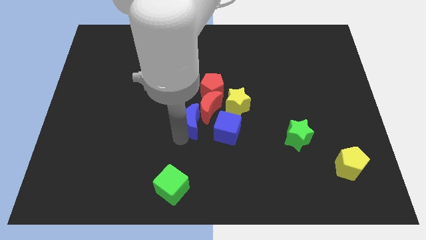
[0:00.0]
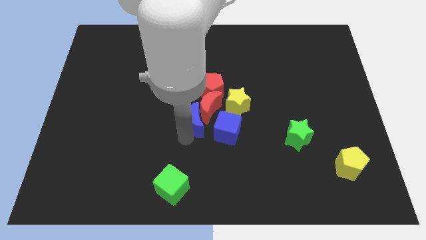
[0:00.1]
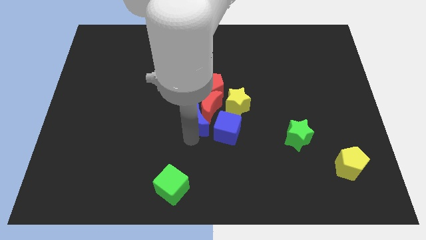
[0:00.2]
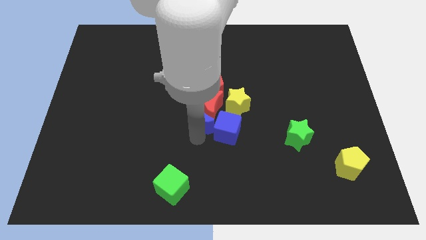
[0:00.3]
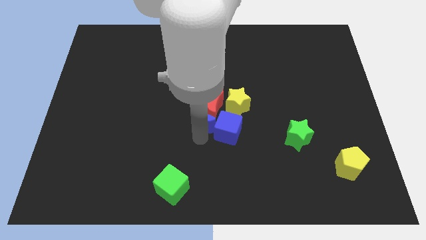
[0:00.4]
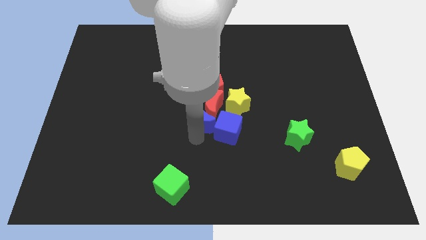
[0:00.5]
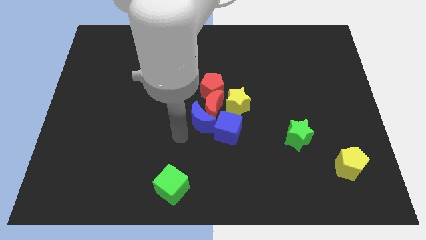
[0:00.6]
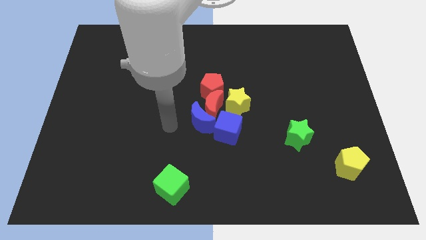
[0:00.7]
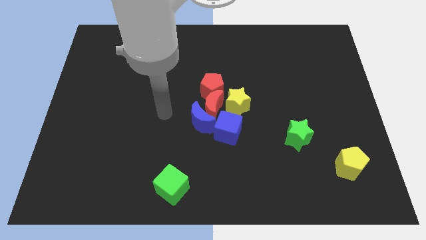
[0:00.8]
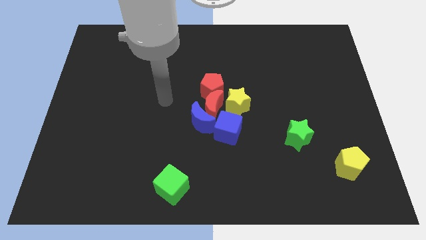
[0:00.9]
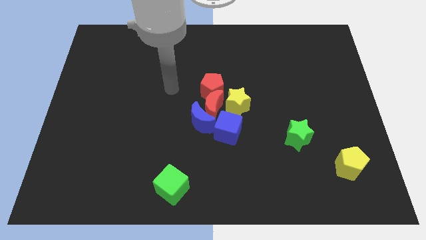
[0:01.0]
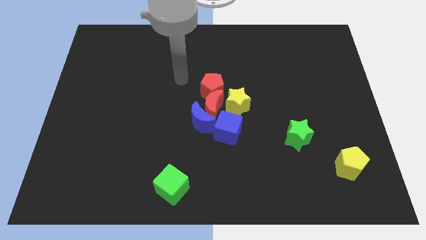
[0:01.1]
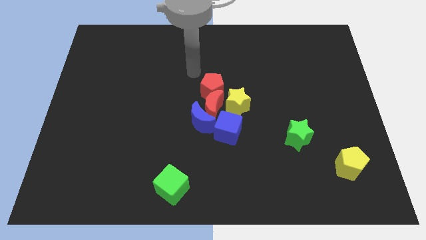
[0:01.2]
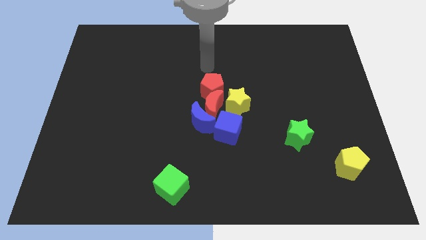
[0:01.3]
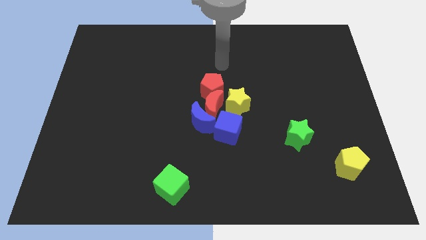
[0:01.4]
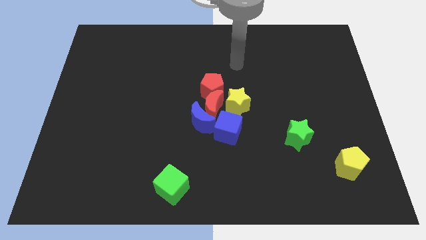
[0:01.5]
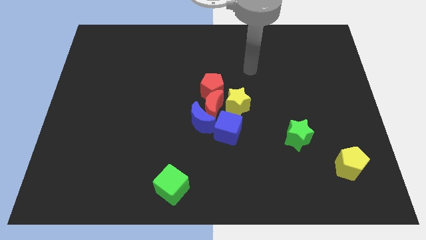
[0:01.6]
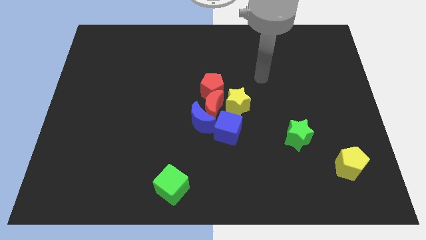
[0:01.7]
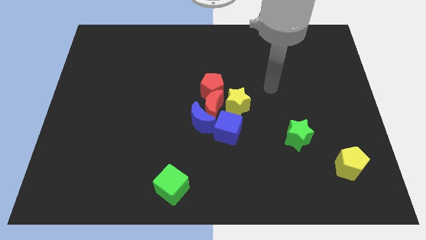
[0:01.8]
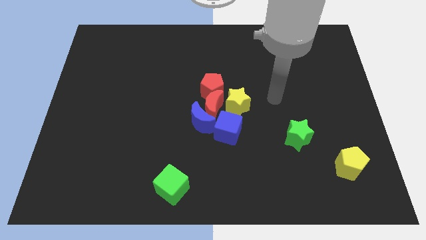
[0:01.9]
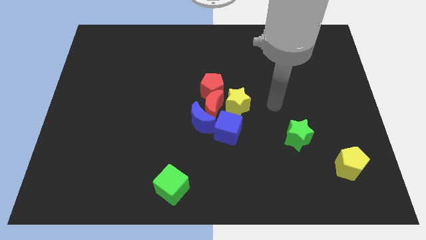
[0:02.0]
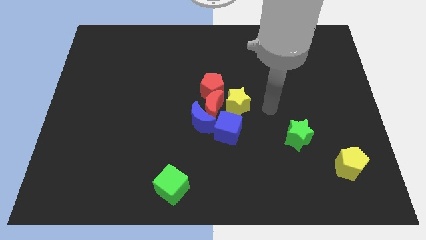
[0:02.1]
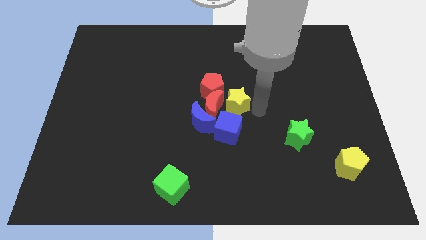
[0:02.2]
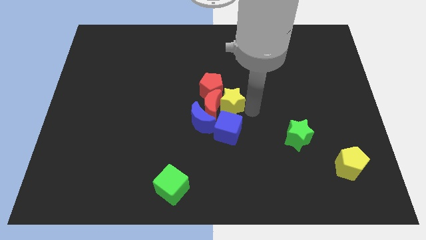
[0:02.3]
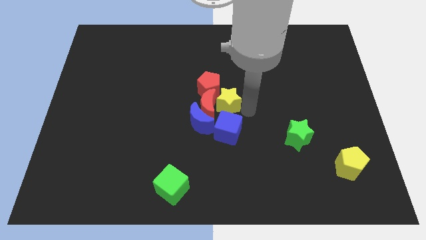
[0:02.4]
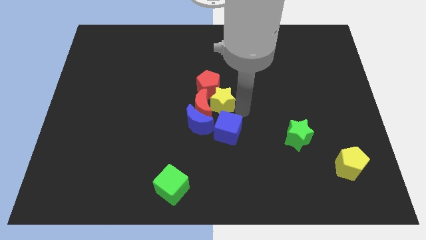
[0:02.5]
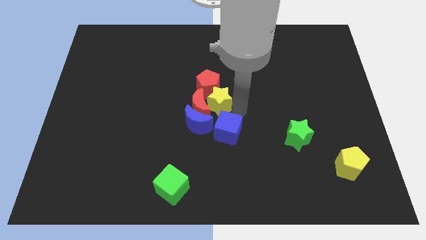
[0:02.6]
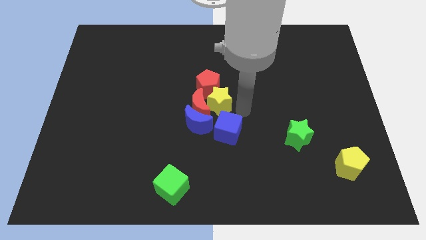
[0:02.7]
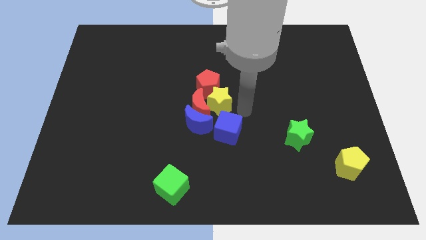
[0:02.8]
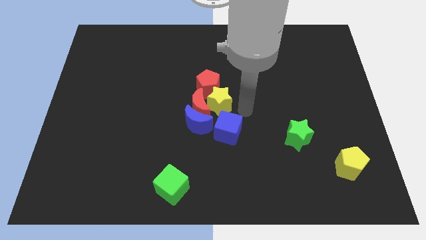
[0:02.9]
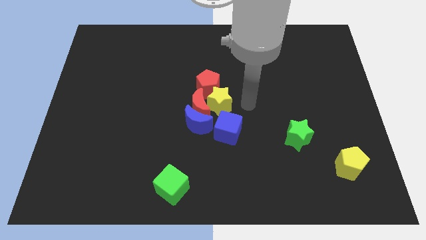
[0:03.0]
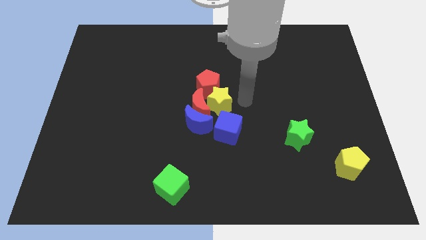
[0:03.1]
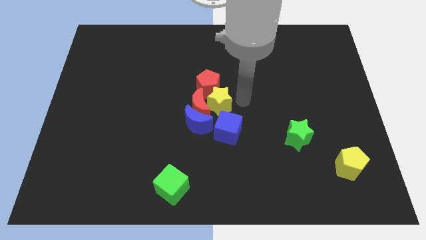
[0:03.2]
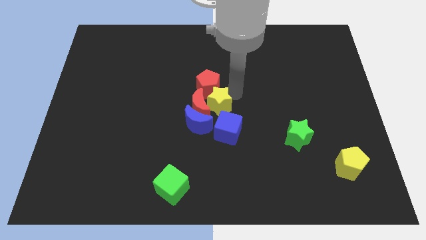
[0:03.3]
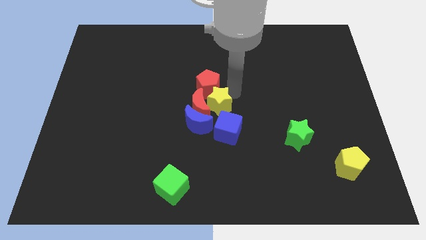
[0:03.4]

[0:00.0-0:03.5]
adjust the group of blocks at the center of the table

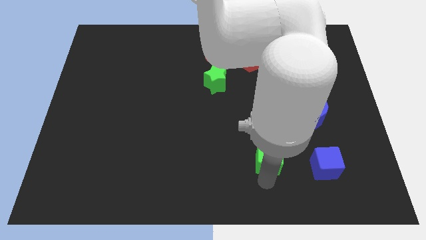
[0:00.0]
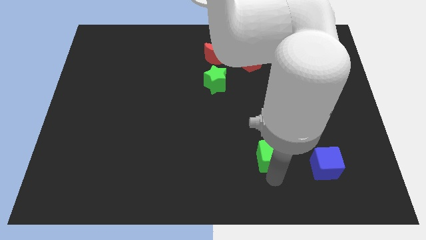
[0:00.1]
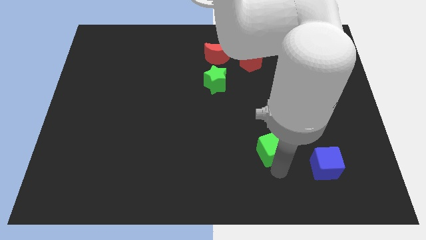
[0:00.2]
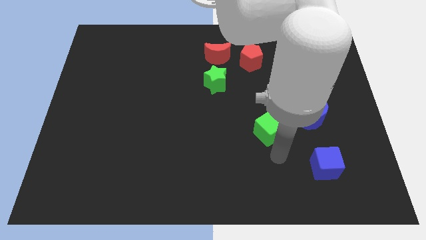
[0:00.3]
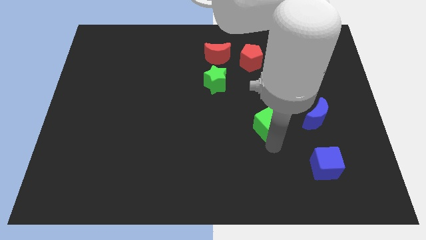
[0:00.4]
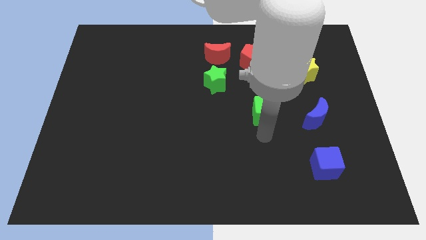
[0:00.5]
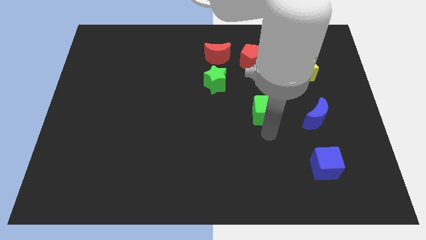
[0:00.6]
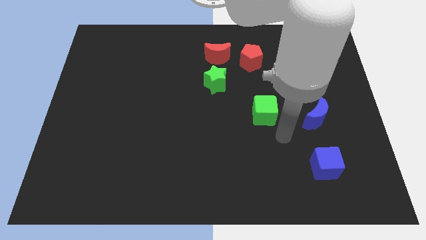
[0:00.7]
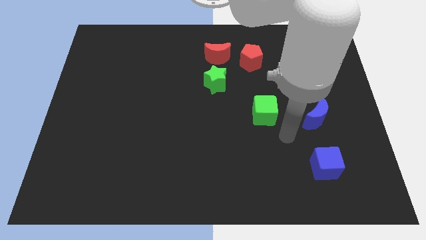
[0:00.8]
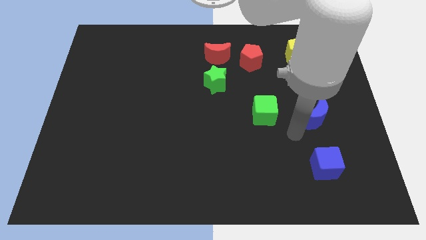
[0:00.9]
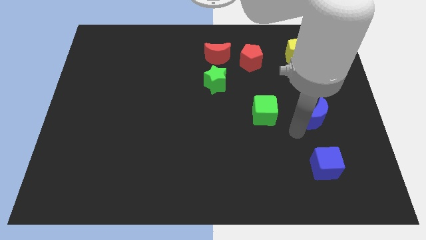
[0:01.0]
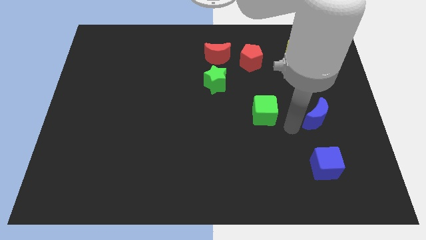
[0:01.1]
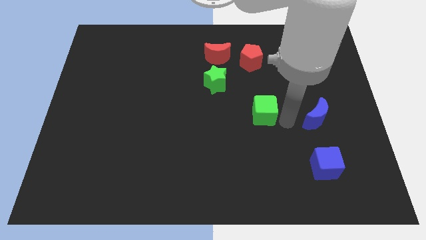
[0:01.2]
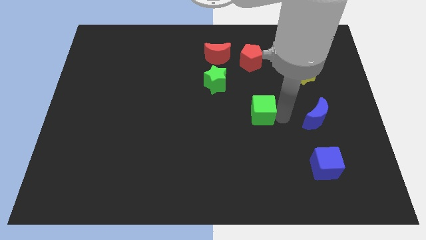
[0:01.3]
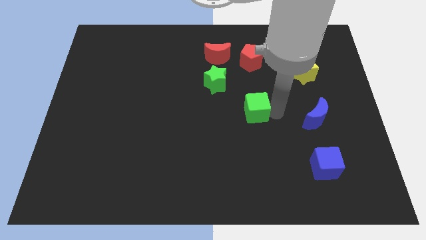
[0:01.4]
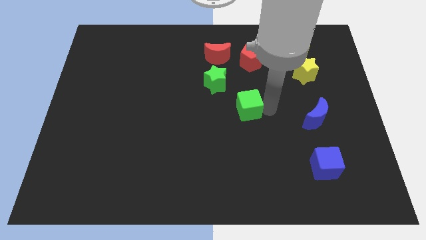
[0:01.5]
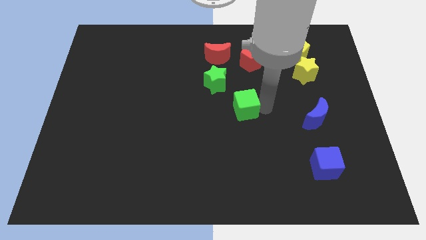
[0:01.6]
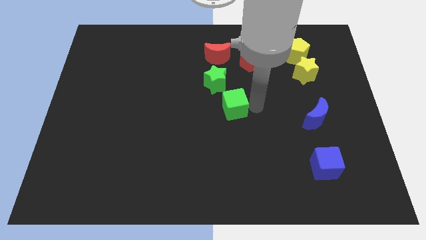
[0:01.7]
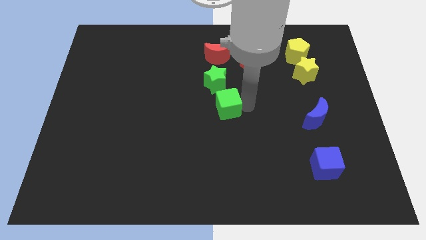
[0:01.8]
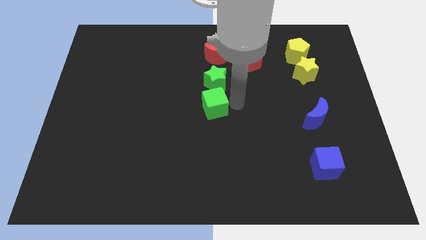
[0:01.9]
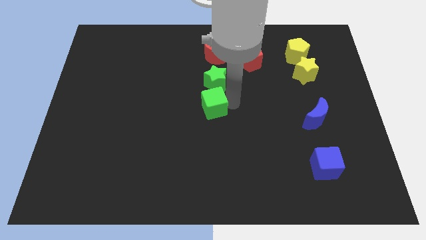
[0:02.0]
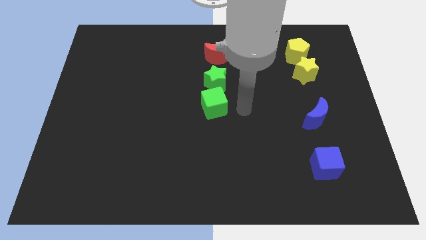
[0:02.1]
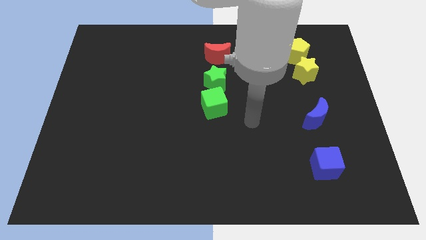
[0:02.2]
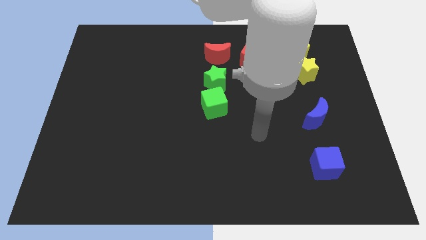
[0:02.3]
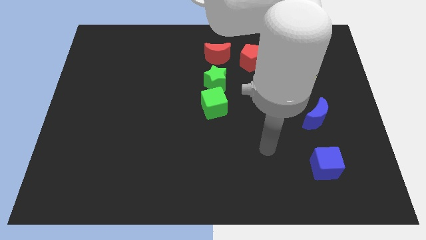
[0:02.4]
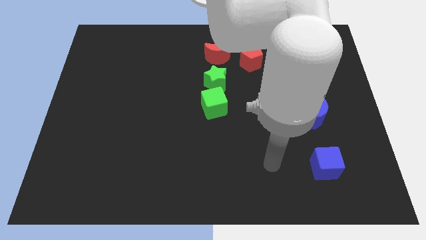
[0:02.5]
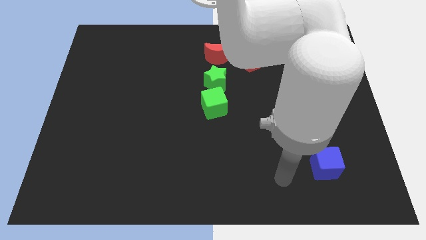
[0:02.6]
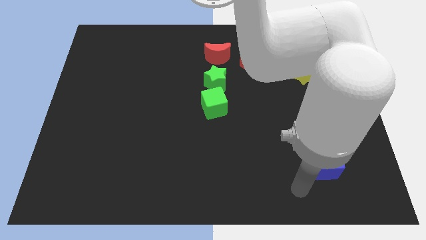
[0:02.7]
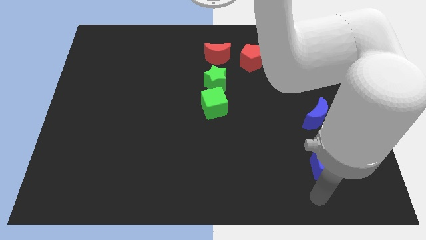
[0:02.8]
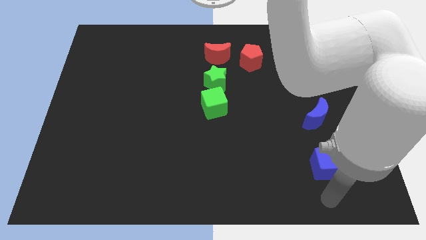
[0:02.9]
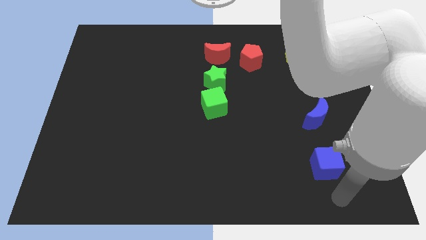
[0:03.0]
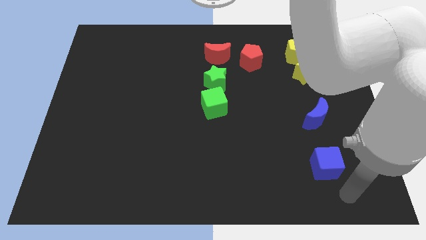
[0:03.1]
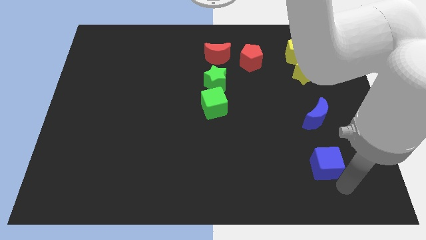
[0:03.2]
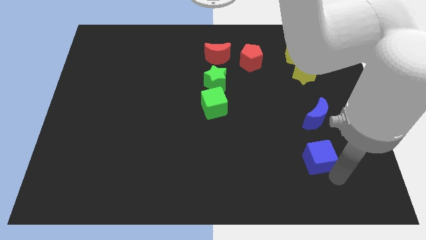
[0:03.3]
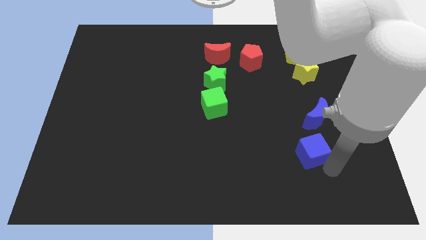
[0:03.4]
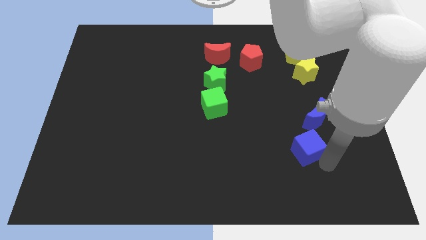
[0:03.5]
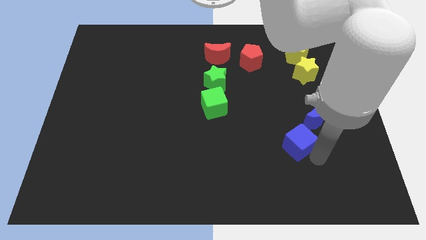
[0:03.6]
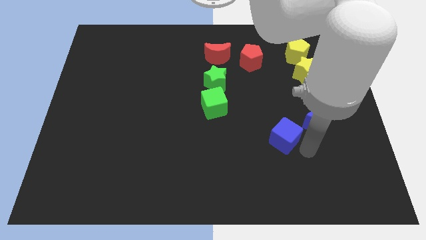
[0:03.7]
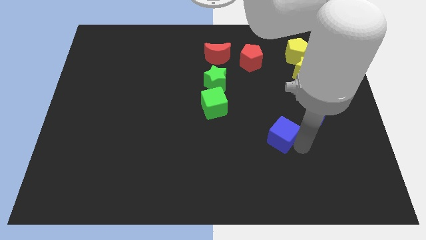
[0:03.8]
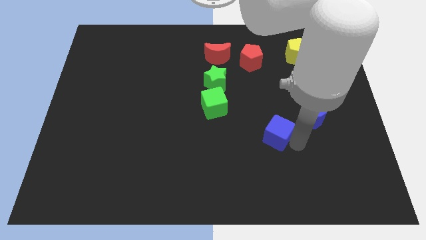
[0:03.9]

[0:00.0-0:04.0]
place the green cube to the bottom of the green star

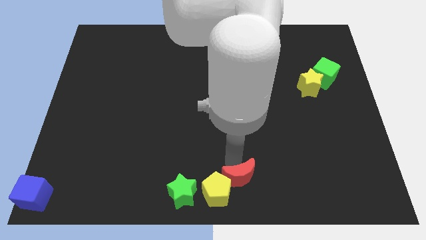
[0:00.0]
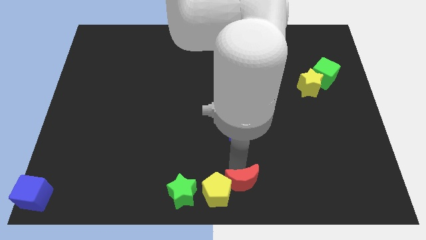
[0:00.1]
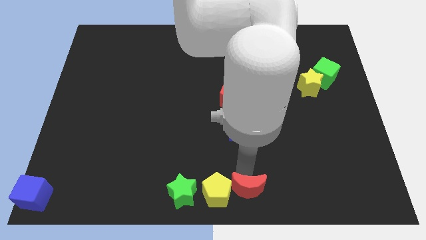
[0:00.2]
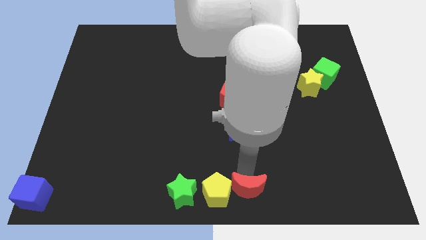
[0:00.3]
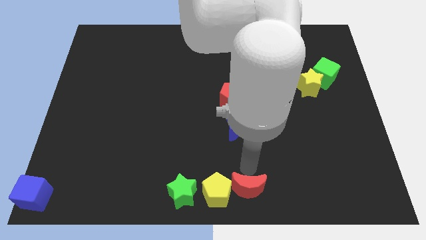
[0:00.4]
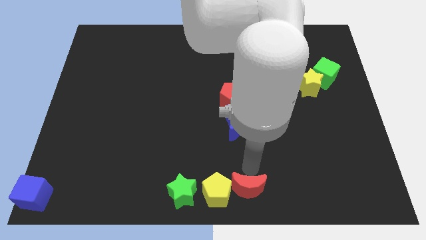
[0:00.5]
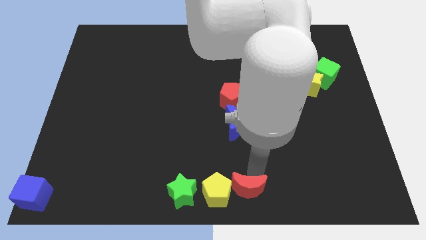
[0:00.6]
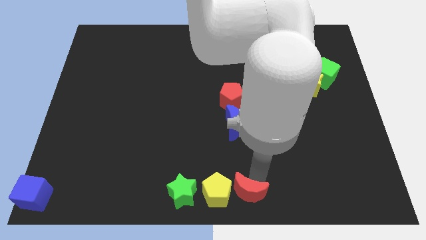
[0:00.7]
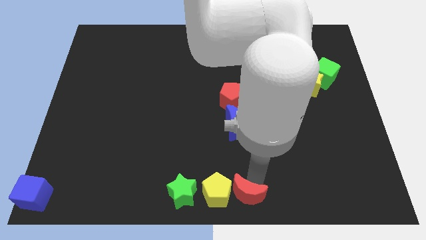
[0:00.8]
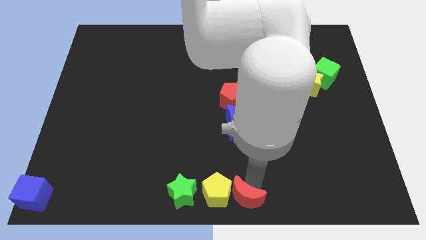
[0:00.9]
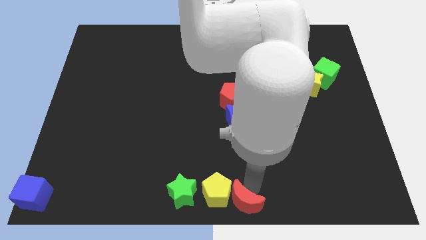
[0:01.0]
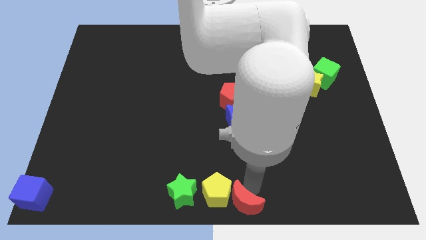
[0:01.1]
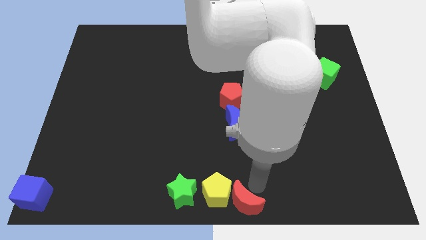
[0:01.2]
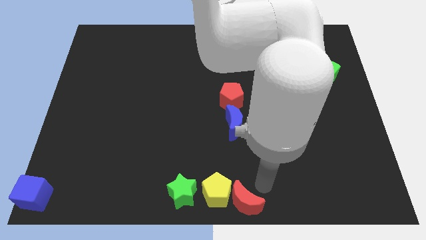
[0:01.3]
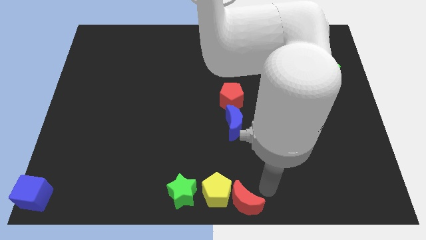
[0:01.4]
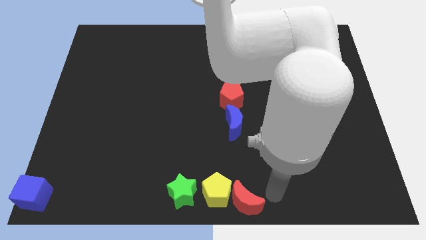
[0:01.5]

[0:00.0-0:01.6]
push the red crescent right to the yellow pentagon to form a horizontal line
